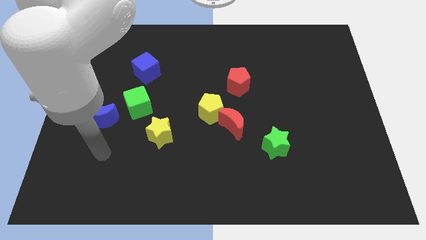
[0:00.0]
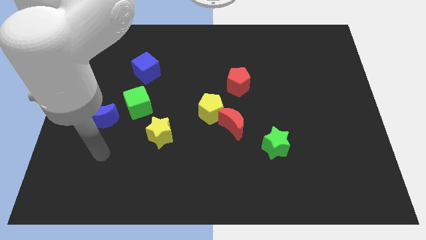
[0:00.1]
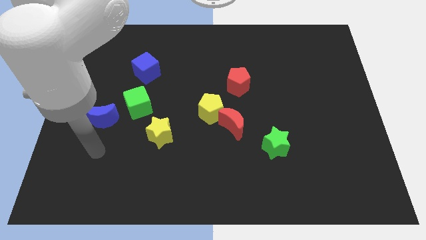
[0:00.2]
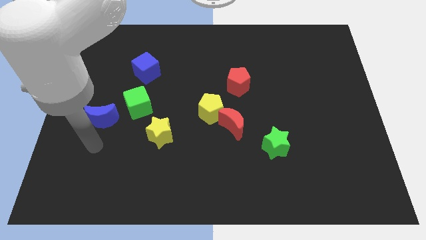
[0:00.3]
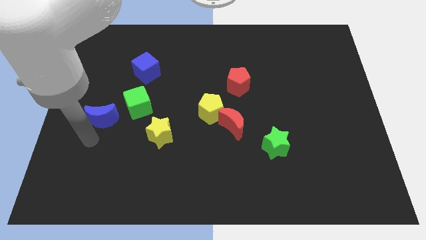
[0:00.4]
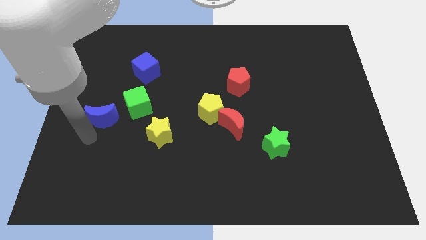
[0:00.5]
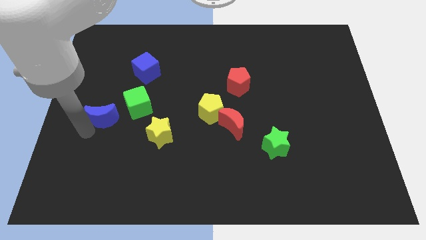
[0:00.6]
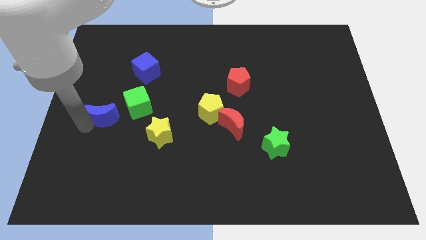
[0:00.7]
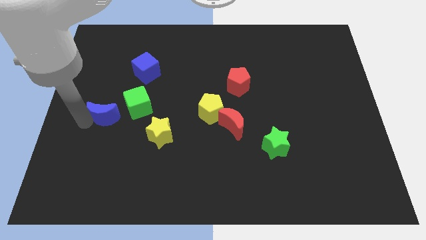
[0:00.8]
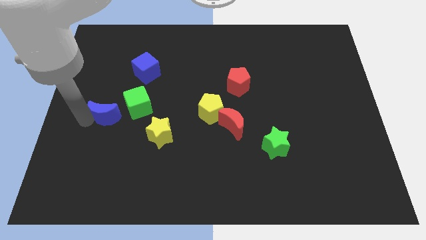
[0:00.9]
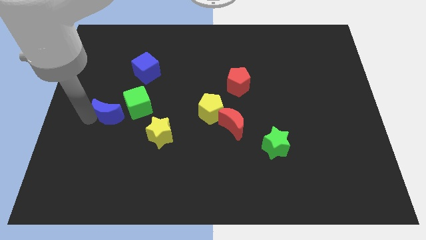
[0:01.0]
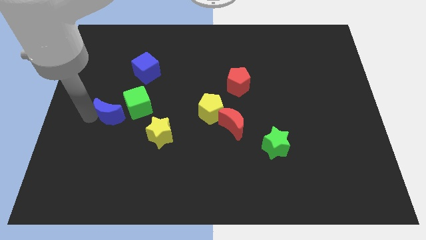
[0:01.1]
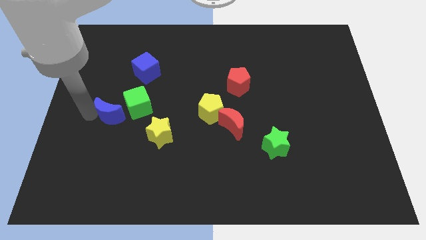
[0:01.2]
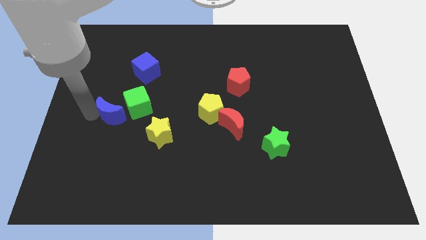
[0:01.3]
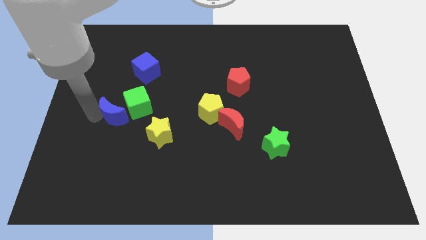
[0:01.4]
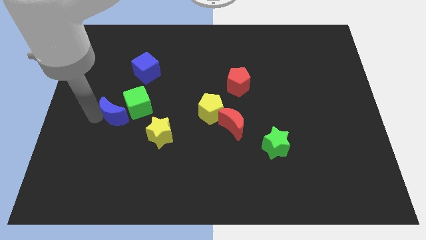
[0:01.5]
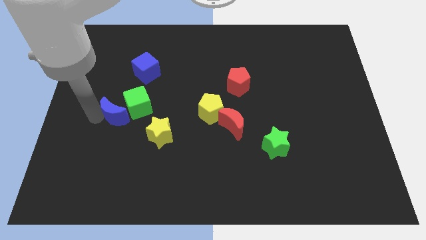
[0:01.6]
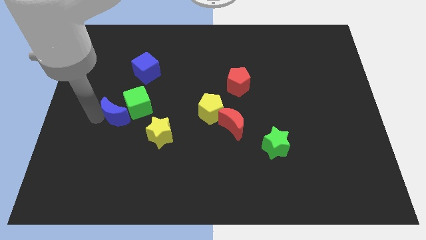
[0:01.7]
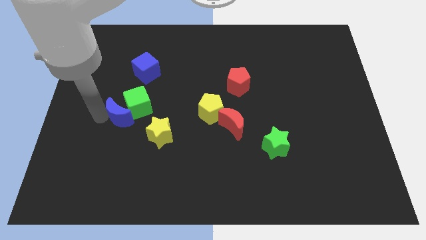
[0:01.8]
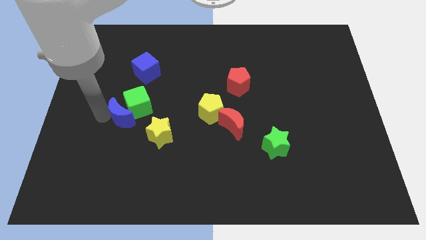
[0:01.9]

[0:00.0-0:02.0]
slide the blue moon into the green cube

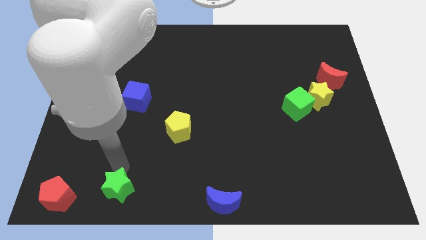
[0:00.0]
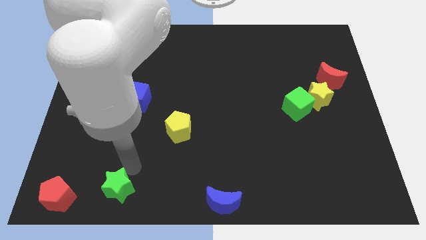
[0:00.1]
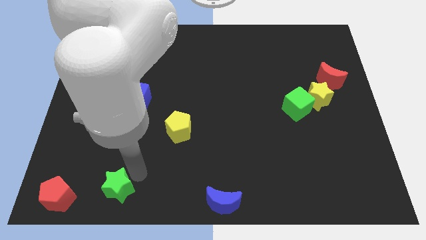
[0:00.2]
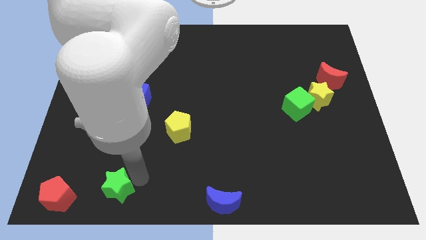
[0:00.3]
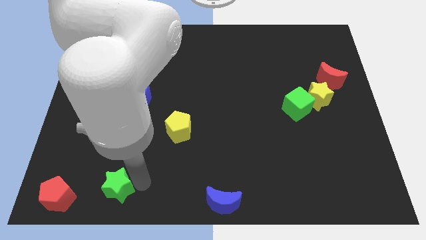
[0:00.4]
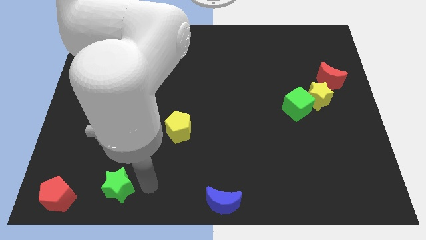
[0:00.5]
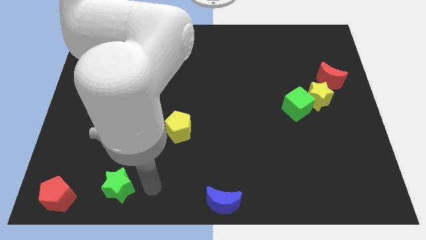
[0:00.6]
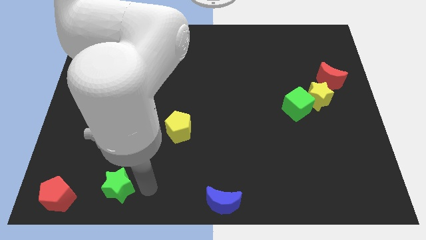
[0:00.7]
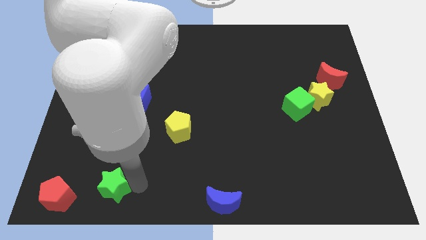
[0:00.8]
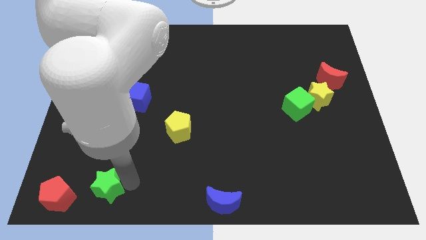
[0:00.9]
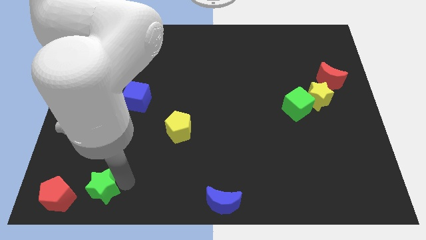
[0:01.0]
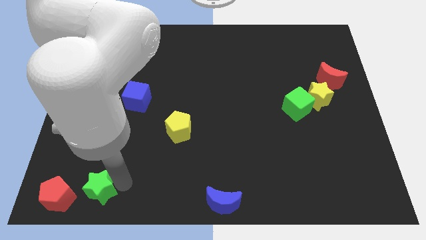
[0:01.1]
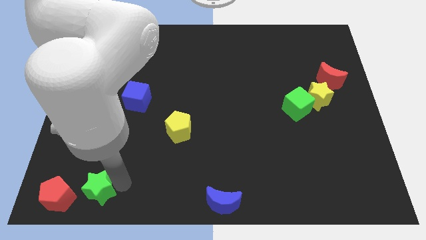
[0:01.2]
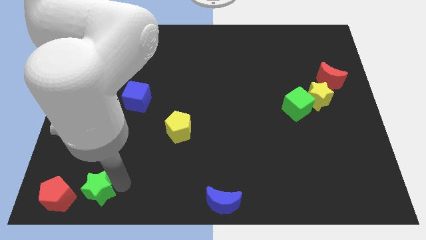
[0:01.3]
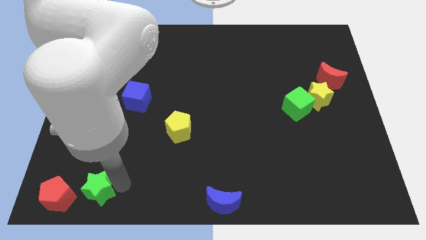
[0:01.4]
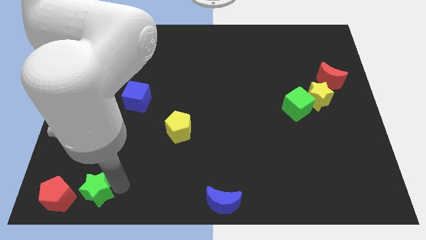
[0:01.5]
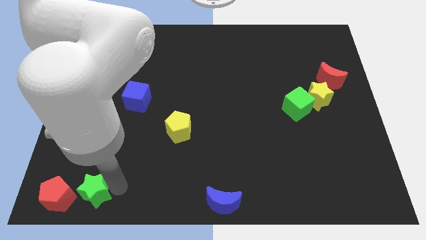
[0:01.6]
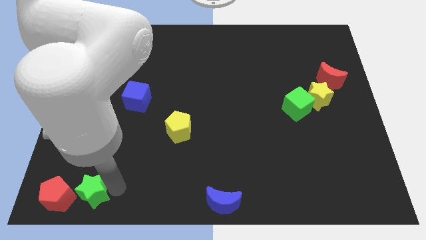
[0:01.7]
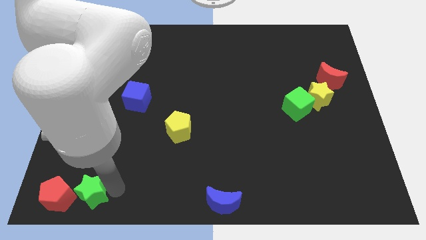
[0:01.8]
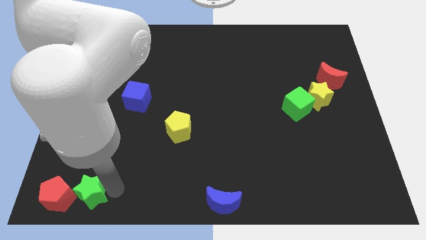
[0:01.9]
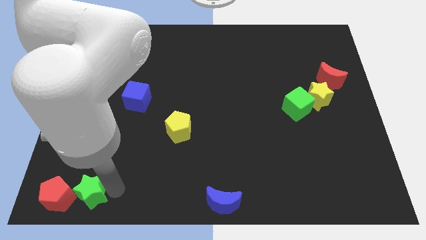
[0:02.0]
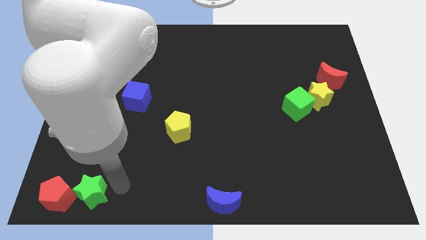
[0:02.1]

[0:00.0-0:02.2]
place the green star to the left of red pentagon

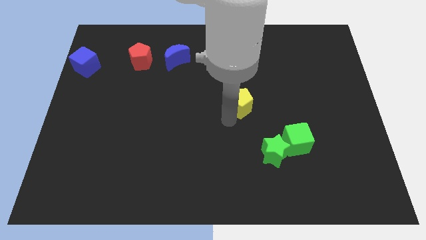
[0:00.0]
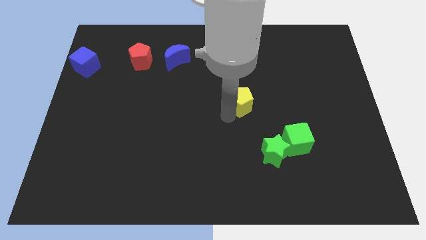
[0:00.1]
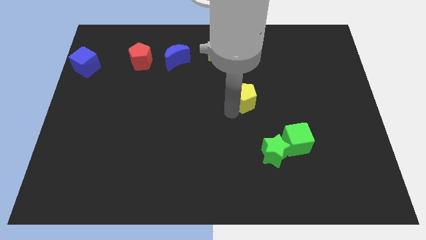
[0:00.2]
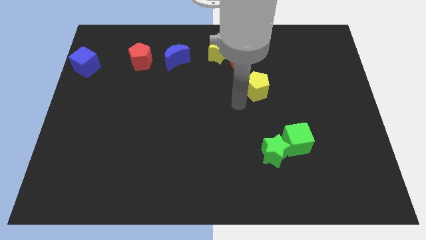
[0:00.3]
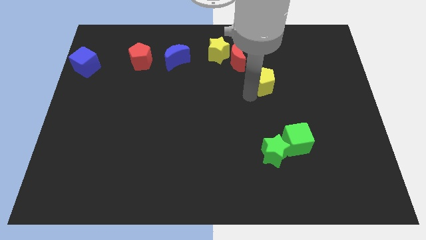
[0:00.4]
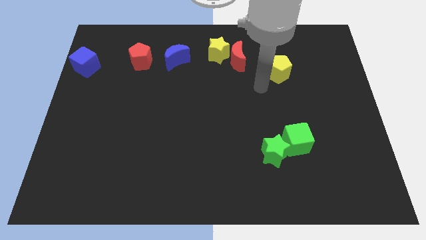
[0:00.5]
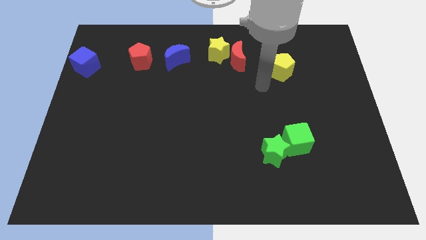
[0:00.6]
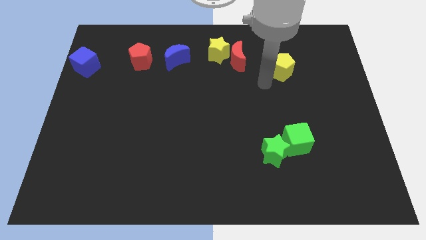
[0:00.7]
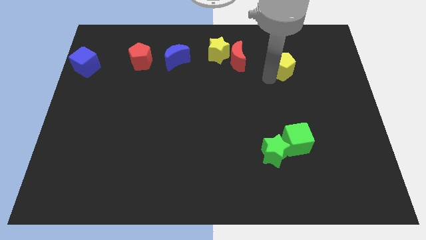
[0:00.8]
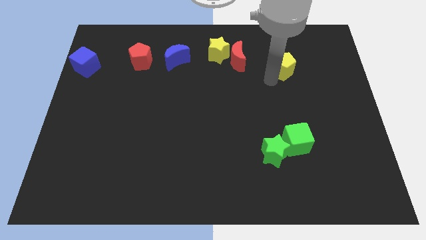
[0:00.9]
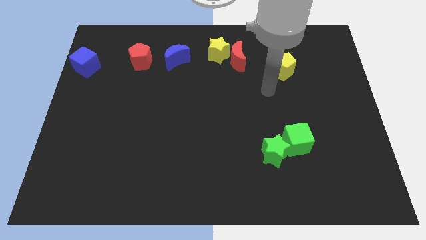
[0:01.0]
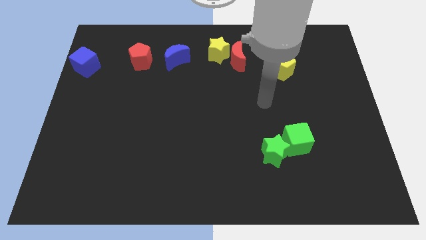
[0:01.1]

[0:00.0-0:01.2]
move the yellow pentagon parallel to the top of the green cube

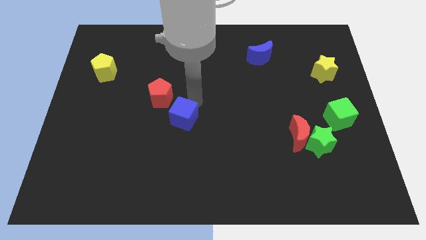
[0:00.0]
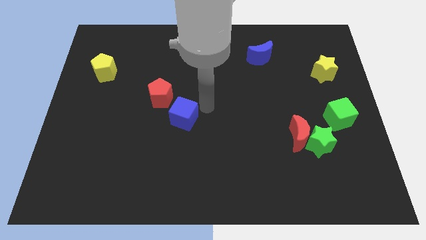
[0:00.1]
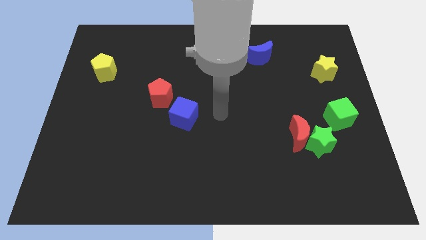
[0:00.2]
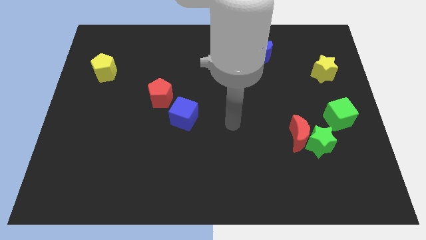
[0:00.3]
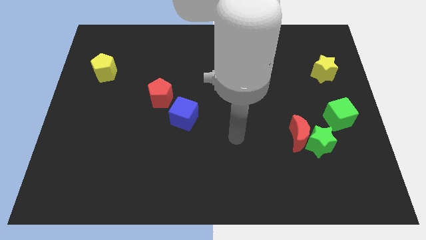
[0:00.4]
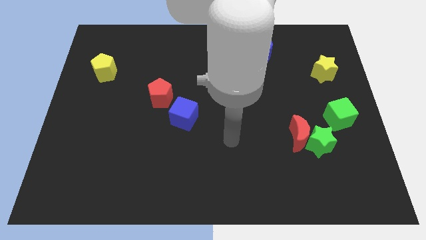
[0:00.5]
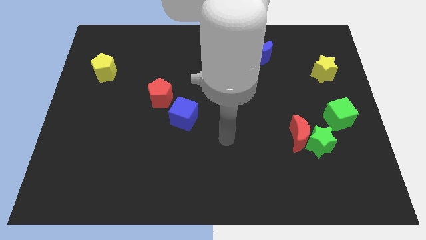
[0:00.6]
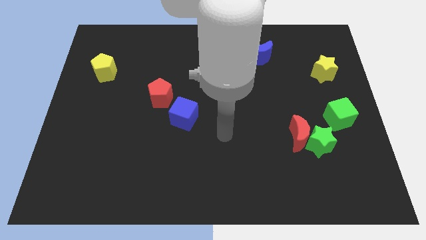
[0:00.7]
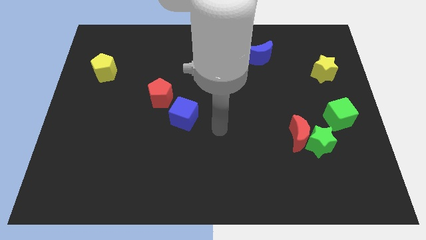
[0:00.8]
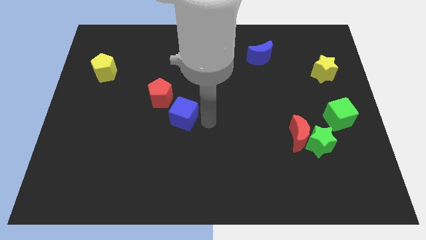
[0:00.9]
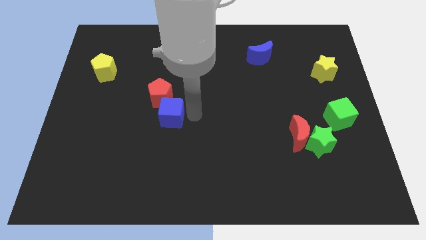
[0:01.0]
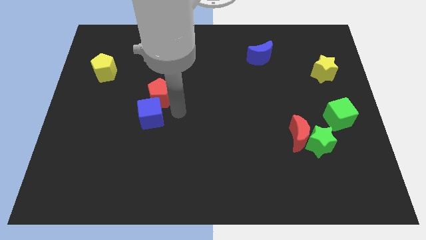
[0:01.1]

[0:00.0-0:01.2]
place the blue cube below the red pentagon

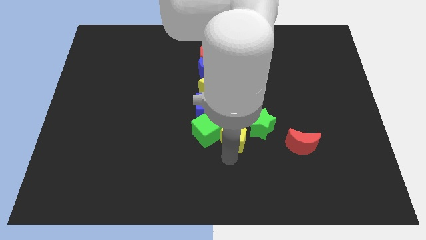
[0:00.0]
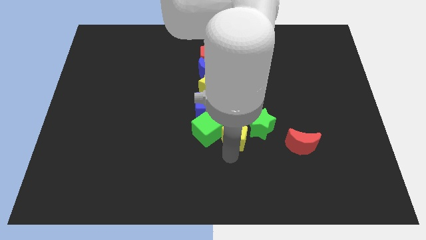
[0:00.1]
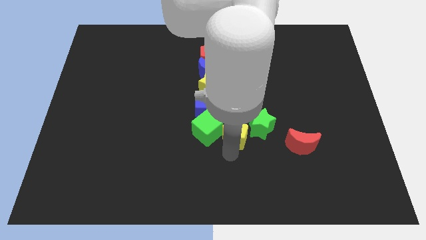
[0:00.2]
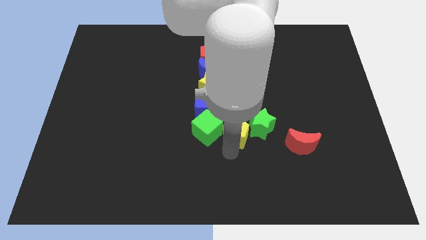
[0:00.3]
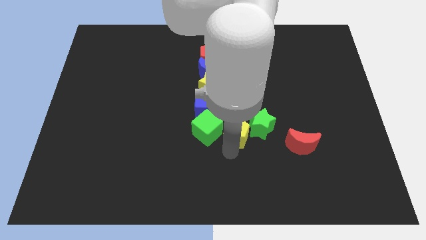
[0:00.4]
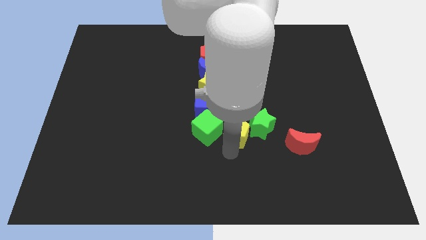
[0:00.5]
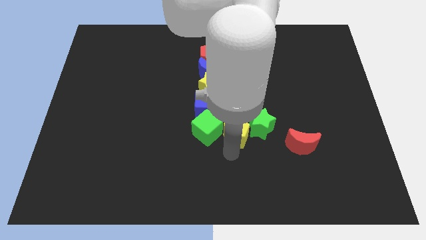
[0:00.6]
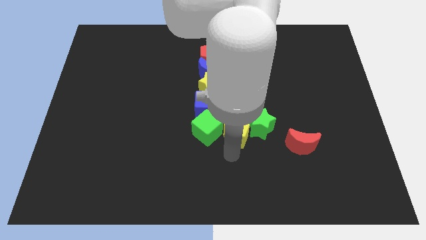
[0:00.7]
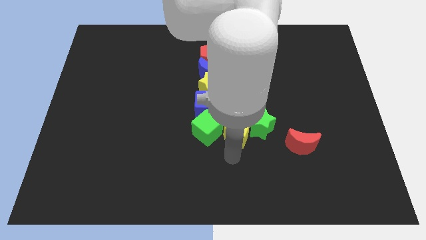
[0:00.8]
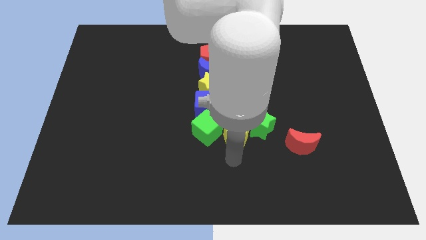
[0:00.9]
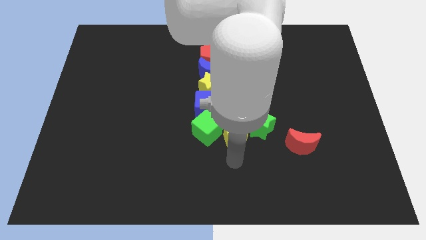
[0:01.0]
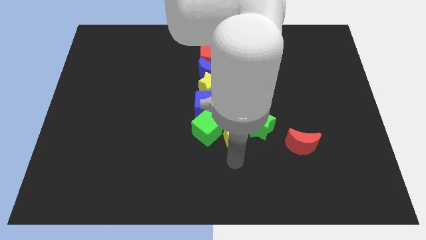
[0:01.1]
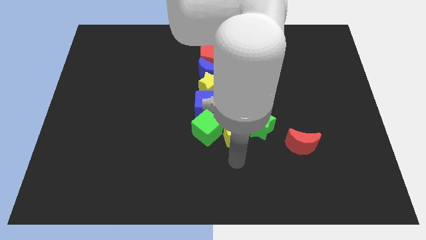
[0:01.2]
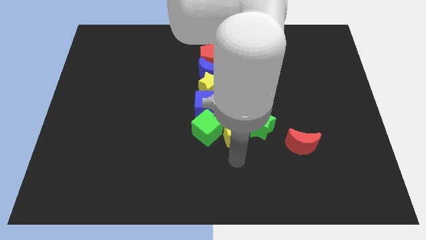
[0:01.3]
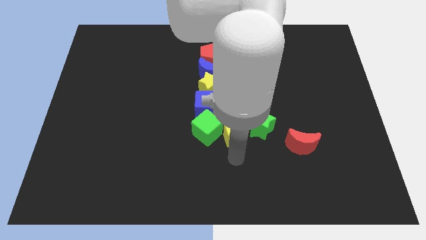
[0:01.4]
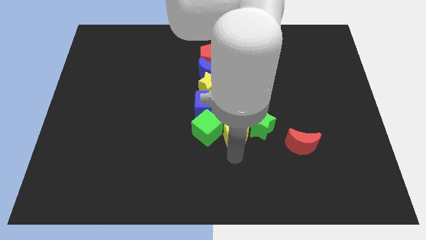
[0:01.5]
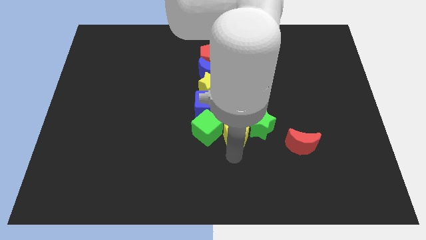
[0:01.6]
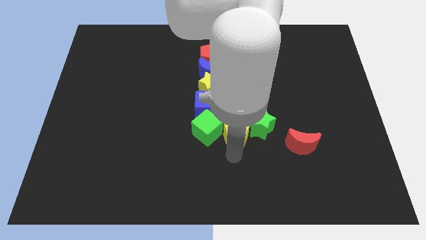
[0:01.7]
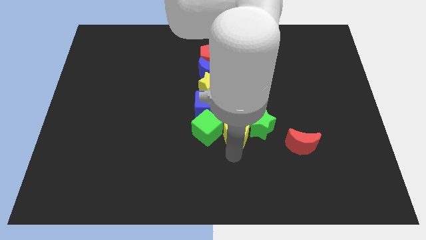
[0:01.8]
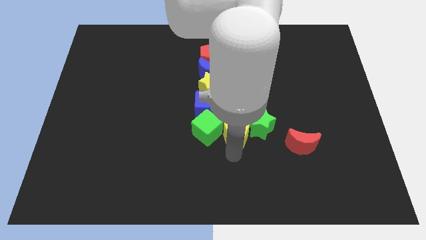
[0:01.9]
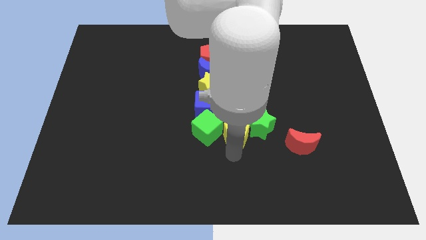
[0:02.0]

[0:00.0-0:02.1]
push yellow pentagon in between the green blocks
